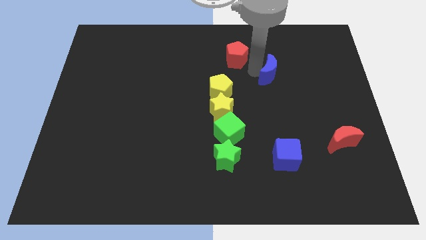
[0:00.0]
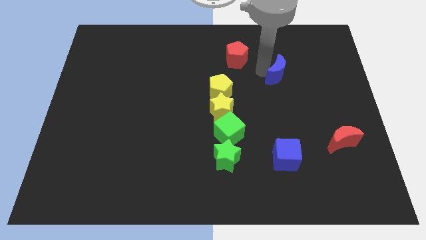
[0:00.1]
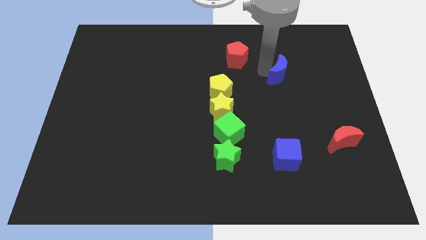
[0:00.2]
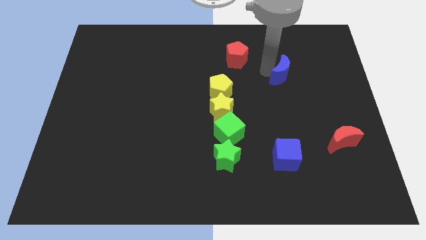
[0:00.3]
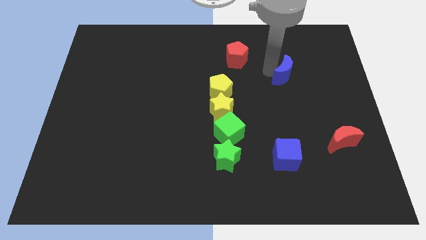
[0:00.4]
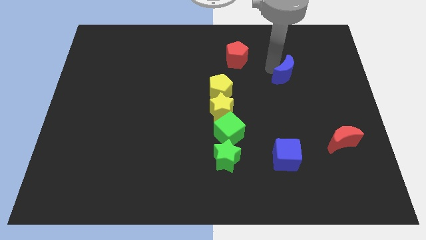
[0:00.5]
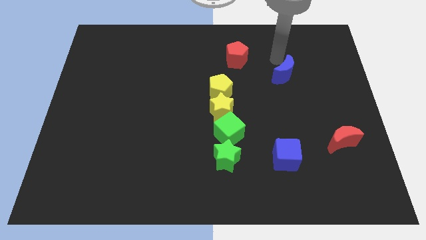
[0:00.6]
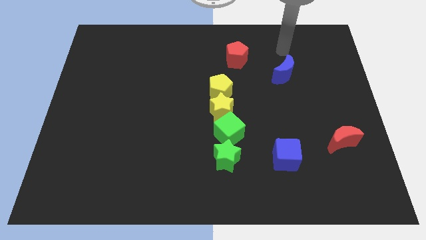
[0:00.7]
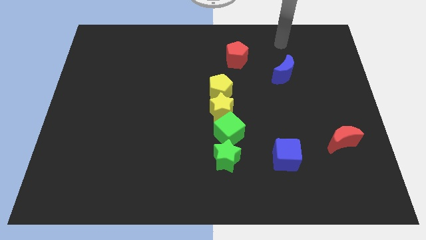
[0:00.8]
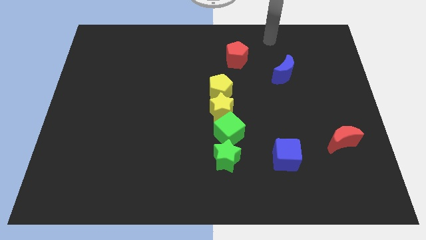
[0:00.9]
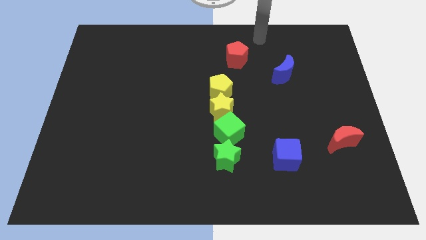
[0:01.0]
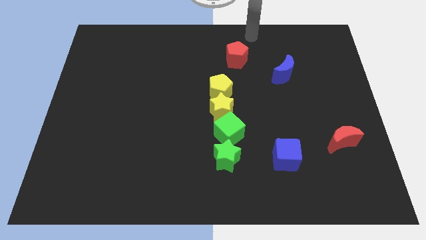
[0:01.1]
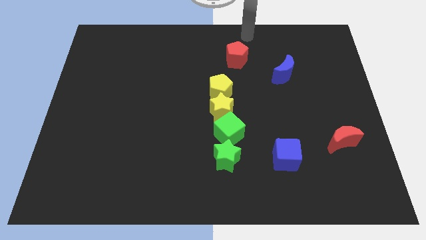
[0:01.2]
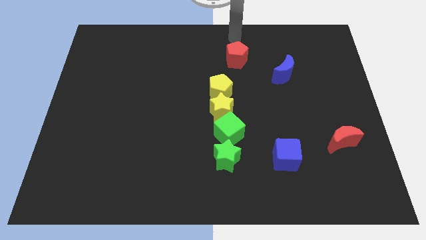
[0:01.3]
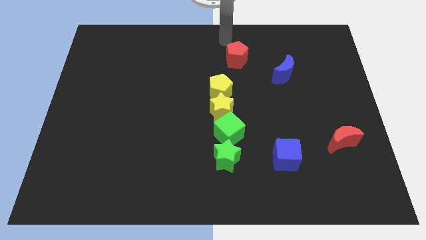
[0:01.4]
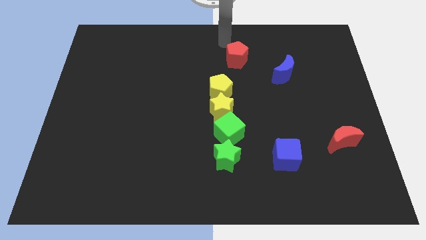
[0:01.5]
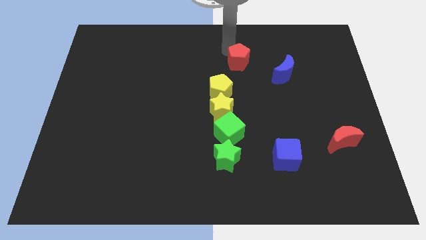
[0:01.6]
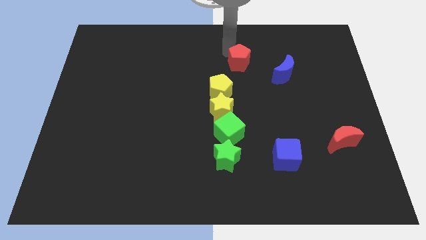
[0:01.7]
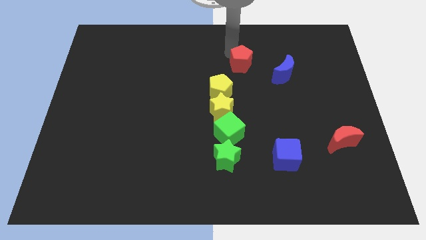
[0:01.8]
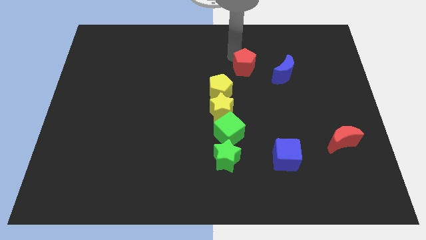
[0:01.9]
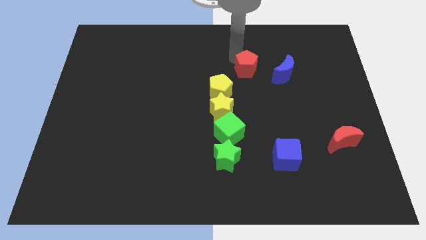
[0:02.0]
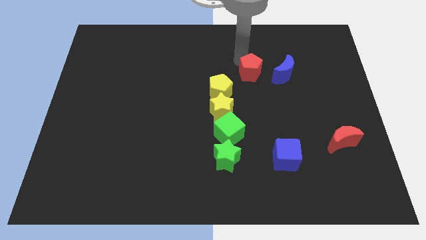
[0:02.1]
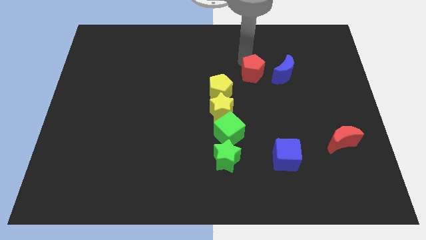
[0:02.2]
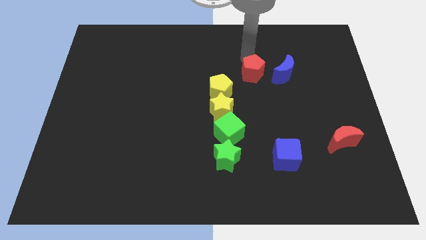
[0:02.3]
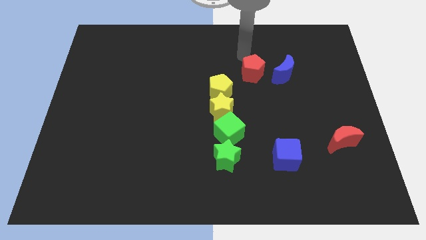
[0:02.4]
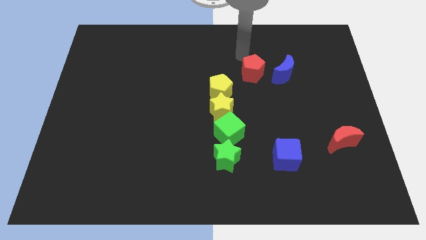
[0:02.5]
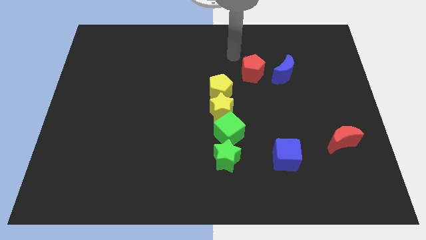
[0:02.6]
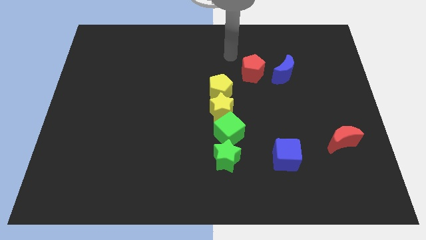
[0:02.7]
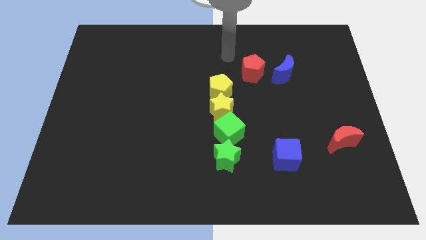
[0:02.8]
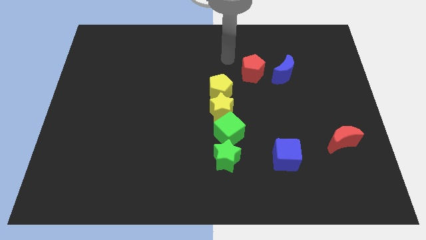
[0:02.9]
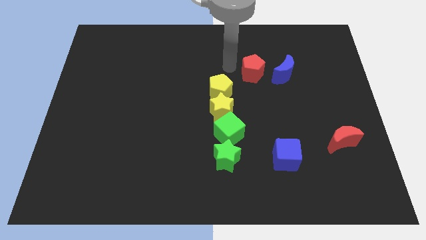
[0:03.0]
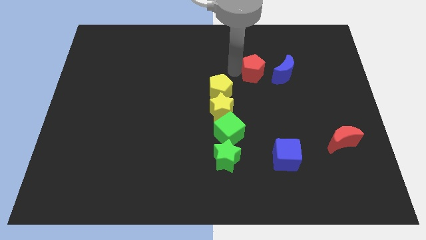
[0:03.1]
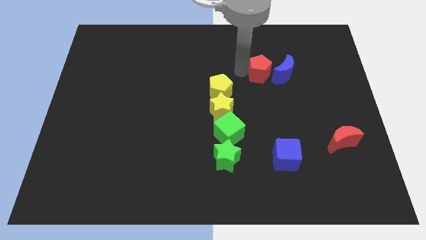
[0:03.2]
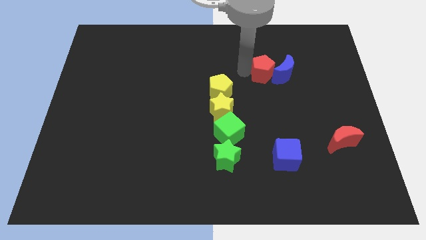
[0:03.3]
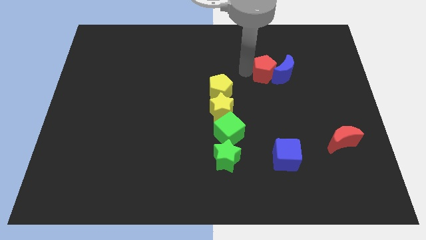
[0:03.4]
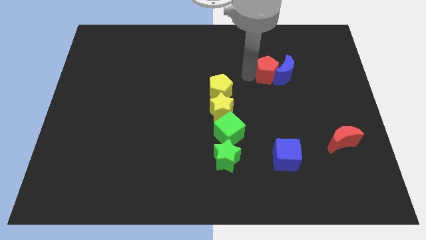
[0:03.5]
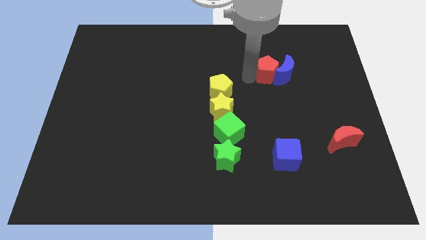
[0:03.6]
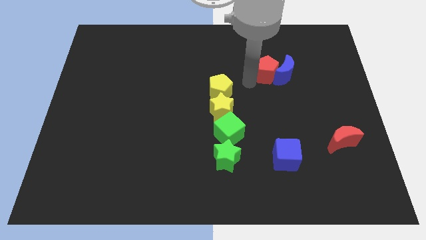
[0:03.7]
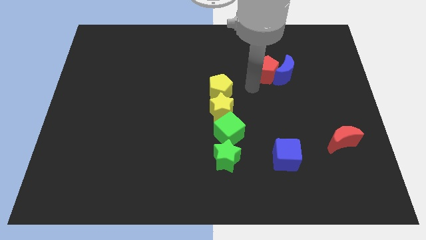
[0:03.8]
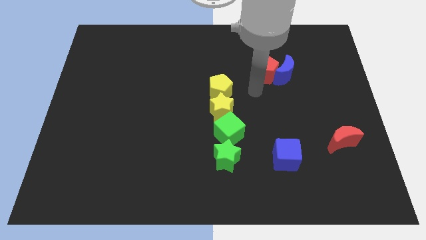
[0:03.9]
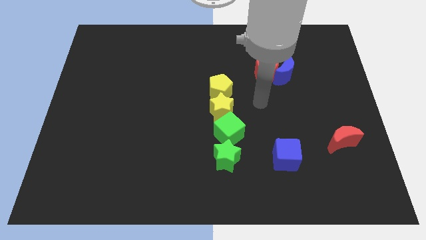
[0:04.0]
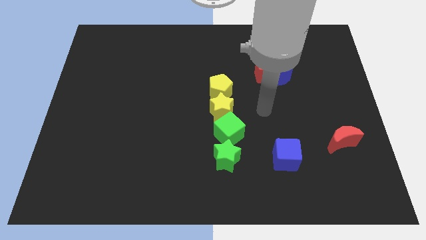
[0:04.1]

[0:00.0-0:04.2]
push the red pentagon slightly to the right

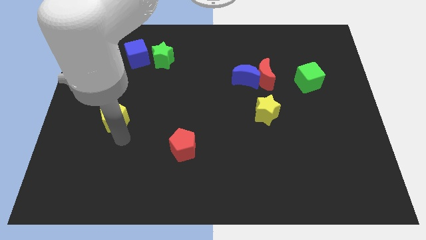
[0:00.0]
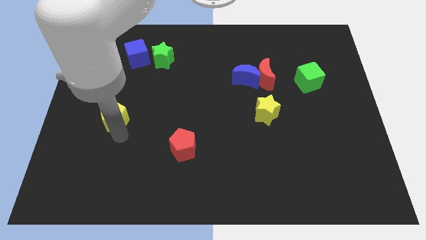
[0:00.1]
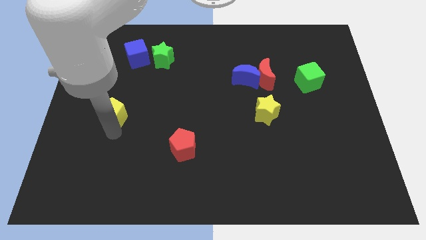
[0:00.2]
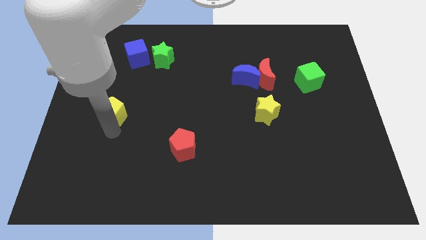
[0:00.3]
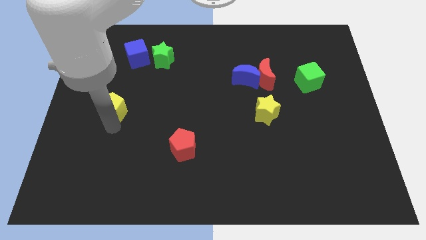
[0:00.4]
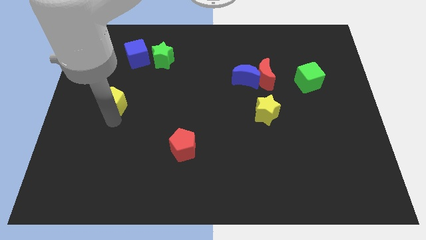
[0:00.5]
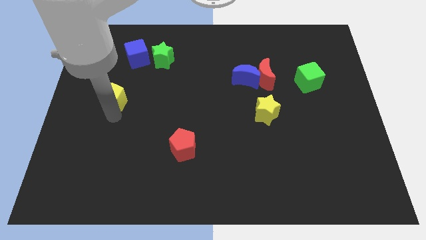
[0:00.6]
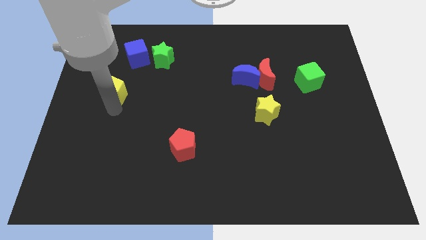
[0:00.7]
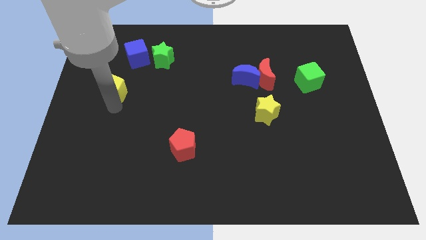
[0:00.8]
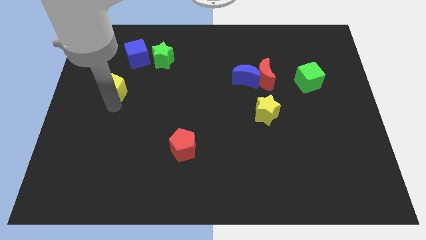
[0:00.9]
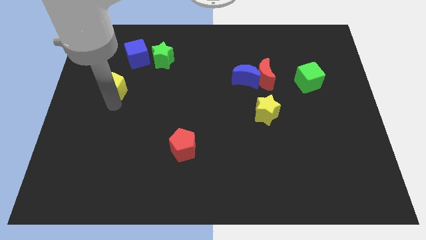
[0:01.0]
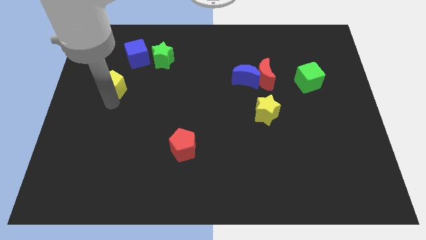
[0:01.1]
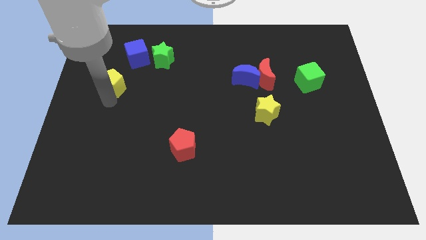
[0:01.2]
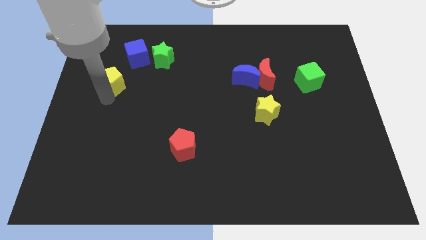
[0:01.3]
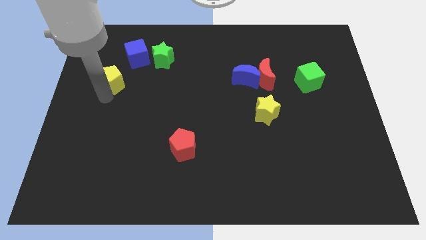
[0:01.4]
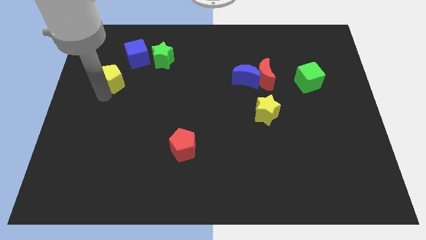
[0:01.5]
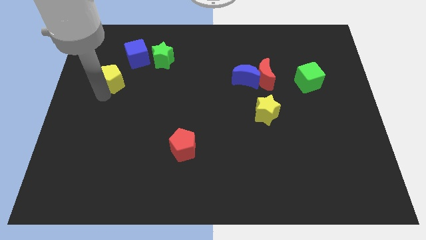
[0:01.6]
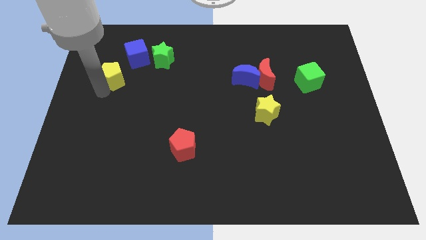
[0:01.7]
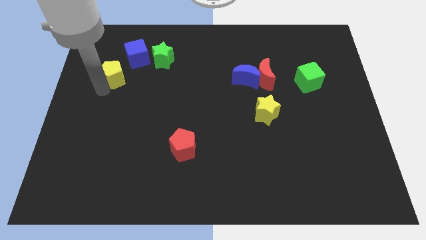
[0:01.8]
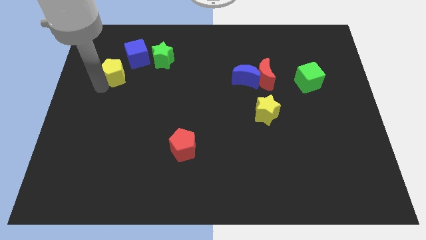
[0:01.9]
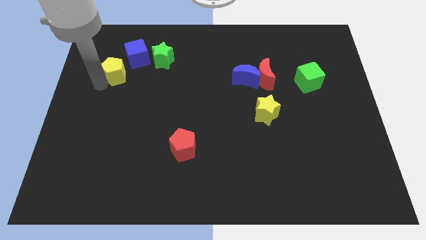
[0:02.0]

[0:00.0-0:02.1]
move the yellow pentagon towards the blue cube

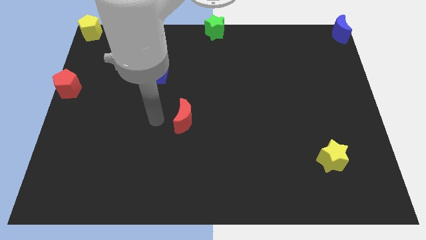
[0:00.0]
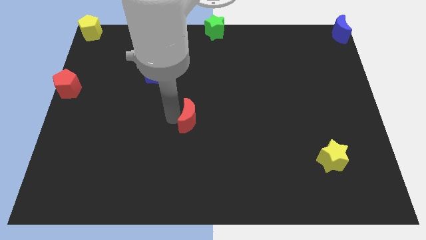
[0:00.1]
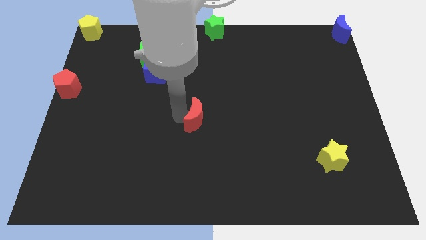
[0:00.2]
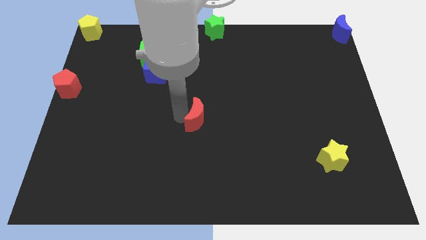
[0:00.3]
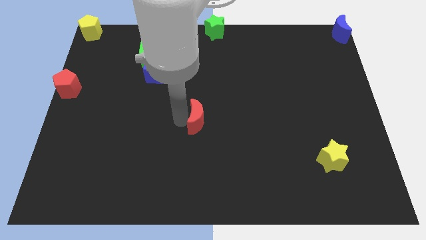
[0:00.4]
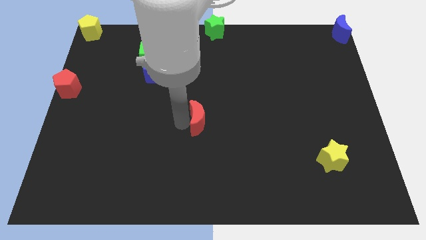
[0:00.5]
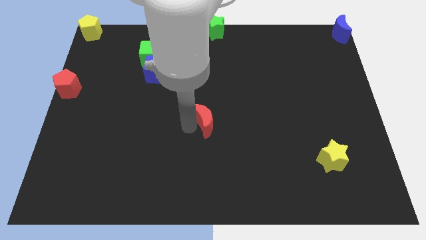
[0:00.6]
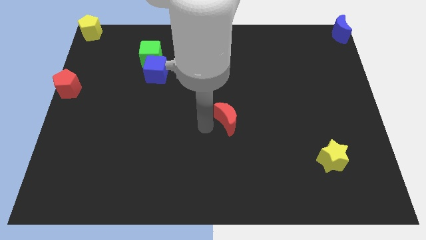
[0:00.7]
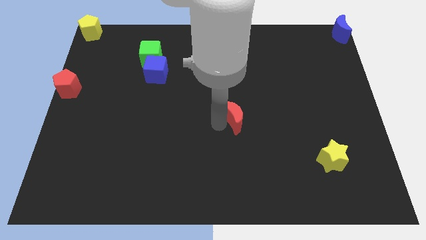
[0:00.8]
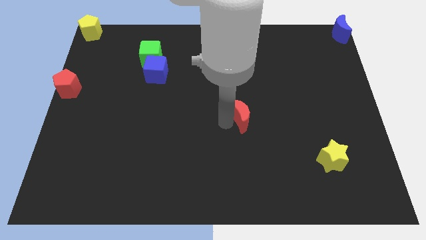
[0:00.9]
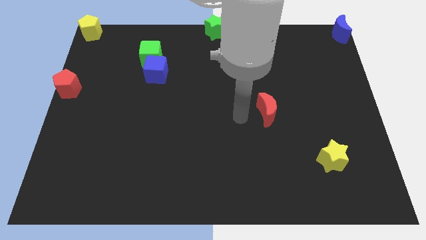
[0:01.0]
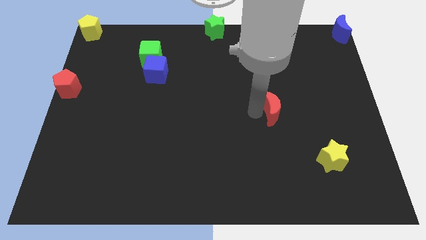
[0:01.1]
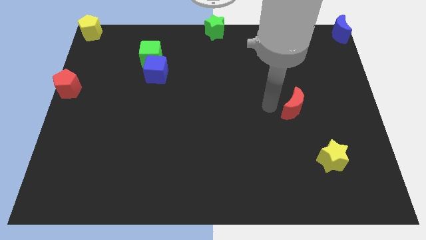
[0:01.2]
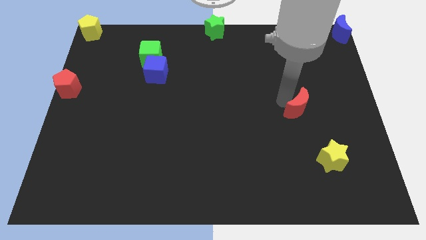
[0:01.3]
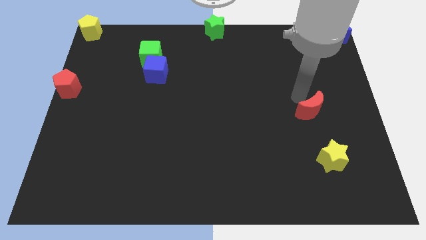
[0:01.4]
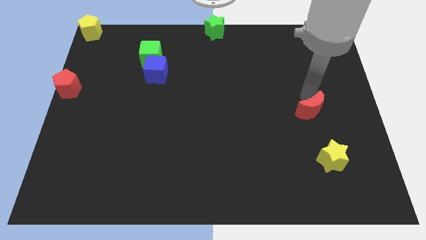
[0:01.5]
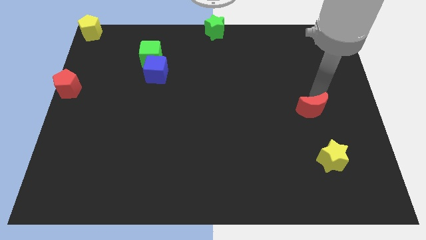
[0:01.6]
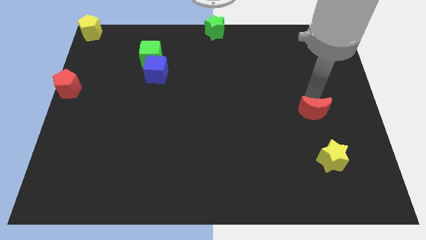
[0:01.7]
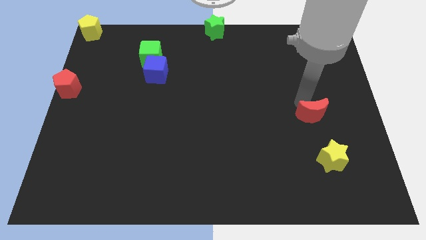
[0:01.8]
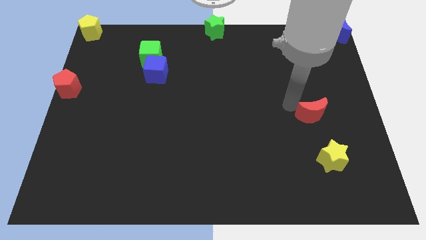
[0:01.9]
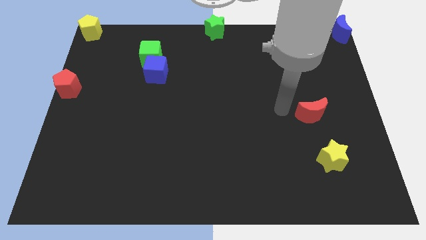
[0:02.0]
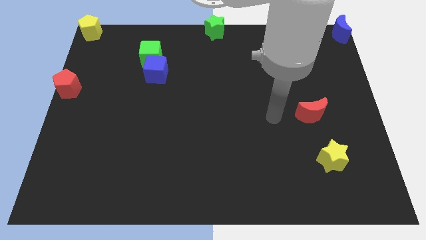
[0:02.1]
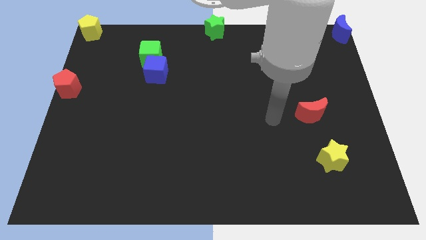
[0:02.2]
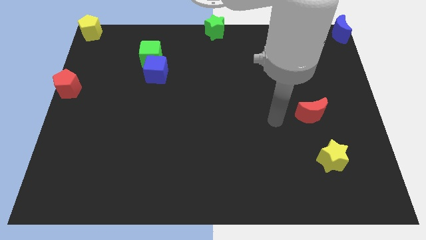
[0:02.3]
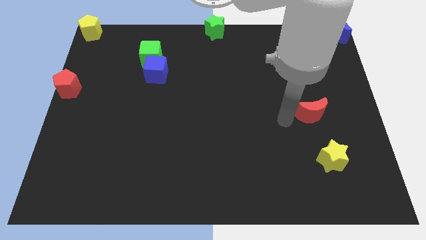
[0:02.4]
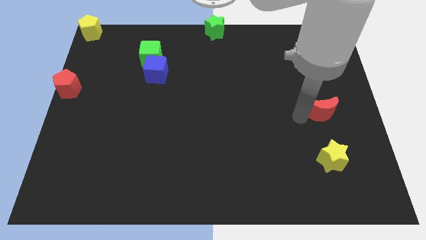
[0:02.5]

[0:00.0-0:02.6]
move the red moon to the top of yellow star

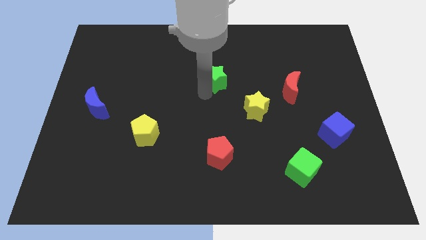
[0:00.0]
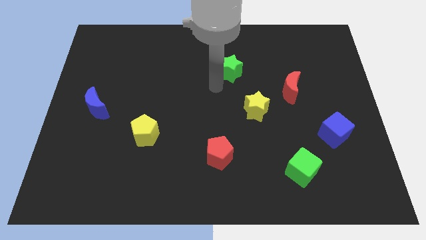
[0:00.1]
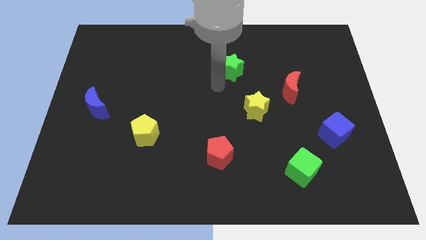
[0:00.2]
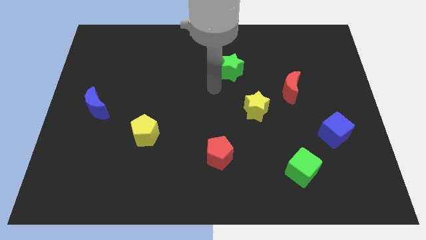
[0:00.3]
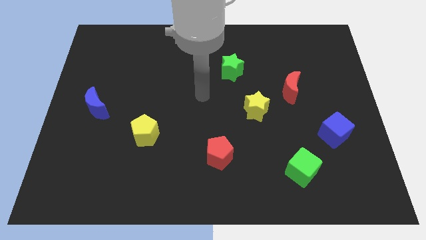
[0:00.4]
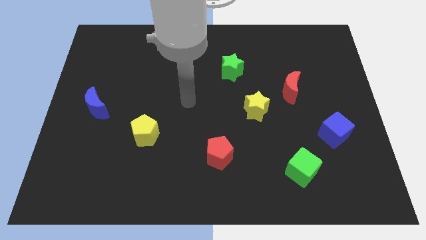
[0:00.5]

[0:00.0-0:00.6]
move the green star to the top right of the board
